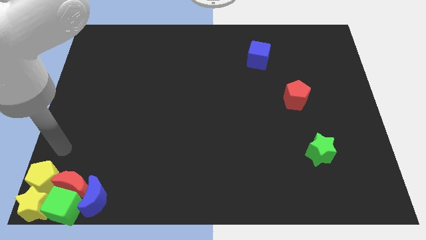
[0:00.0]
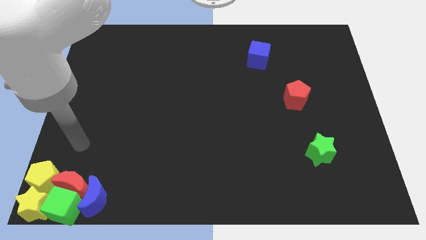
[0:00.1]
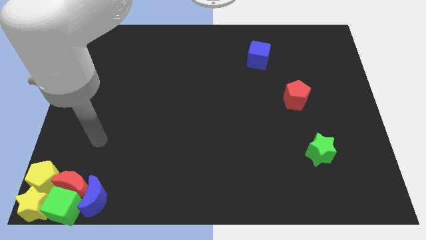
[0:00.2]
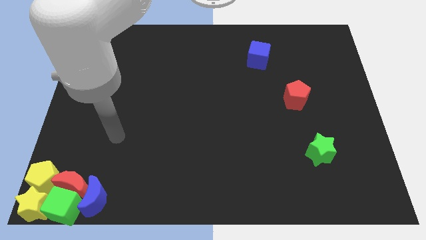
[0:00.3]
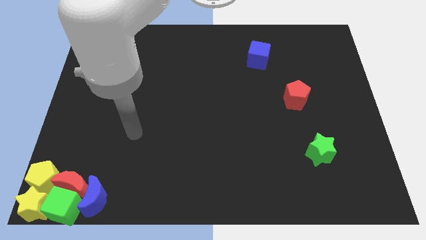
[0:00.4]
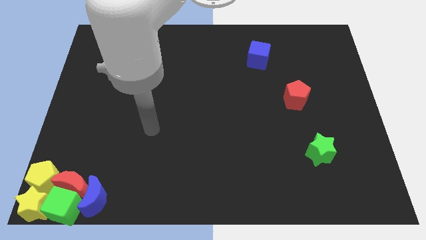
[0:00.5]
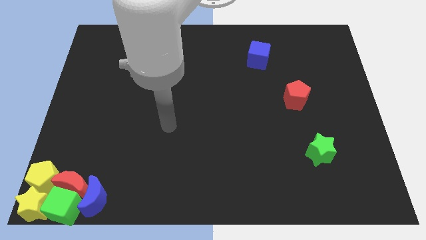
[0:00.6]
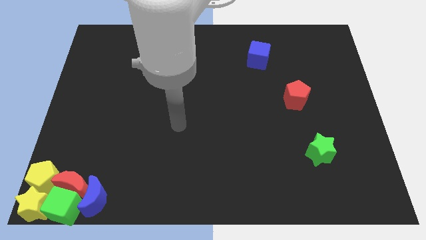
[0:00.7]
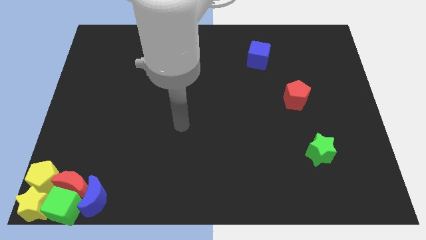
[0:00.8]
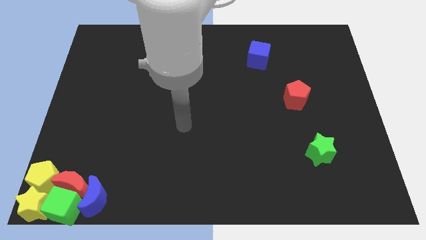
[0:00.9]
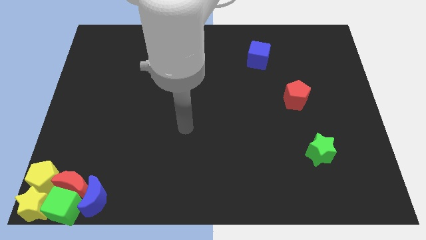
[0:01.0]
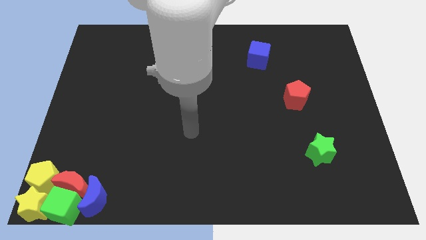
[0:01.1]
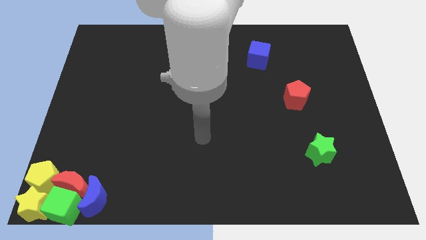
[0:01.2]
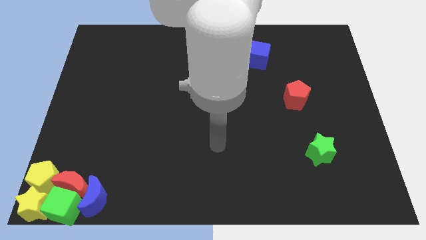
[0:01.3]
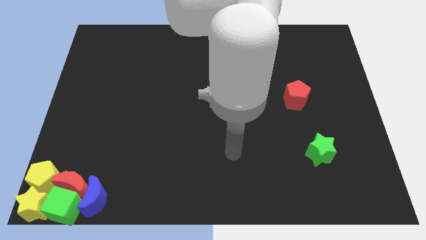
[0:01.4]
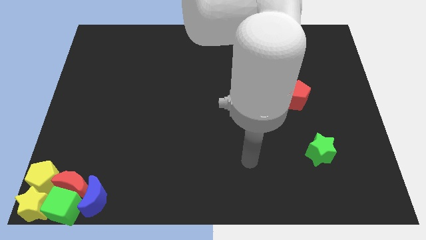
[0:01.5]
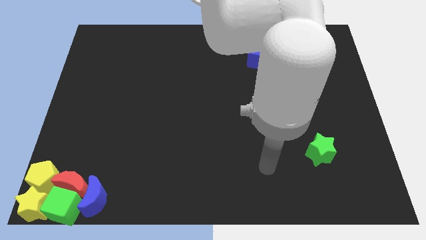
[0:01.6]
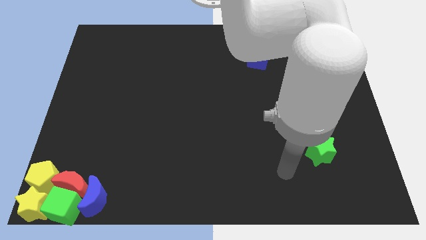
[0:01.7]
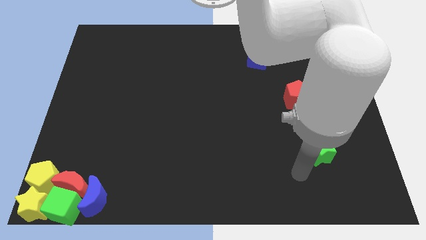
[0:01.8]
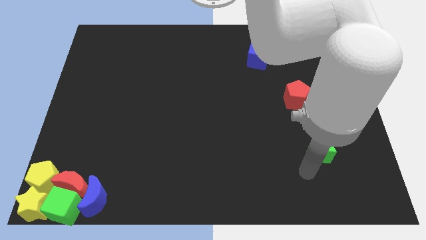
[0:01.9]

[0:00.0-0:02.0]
place your arm below green star

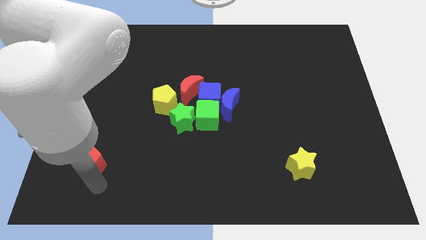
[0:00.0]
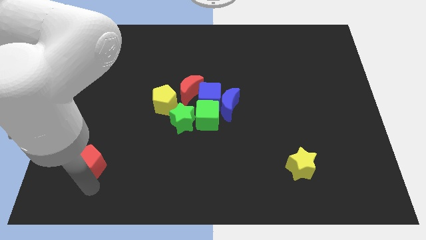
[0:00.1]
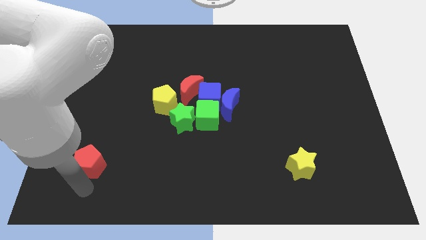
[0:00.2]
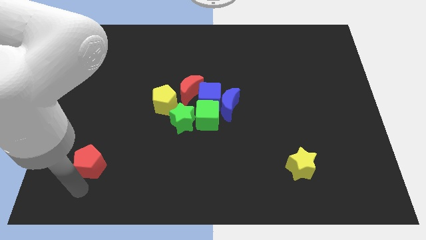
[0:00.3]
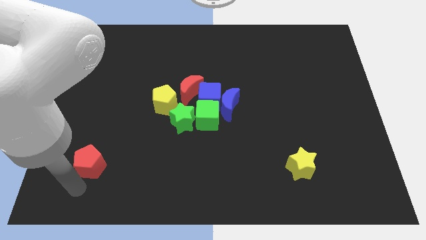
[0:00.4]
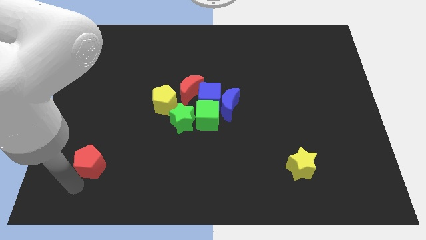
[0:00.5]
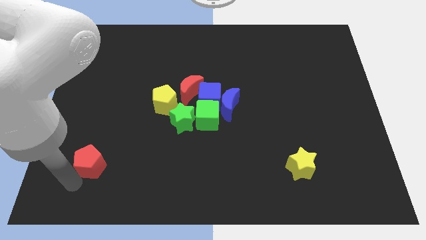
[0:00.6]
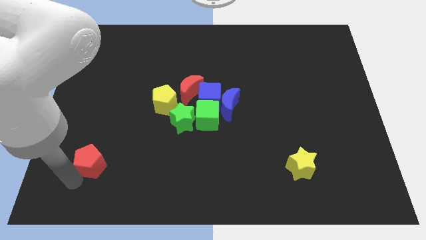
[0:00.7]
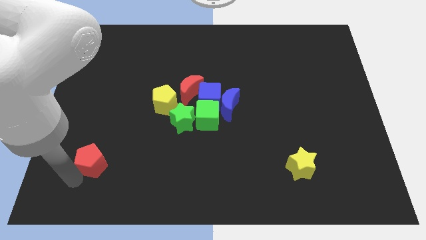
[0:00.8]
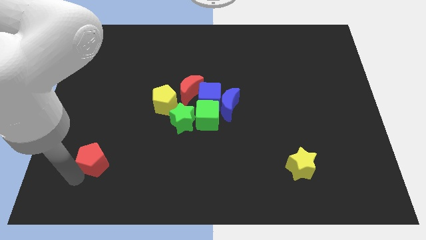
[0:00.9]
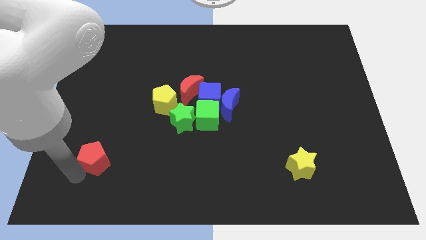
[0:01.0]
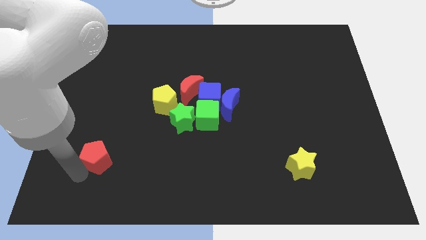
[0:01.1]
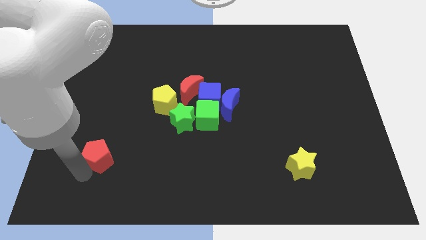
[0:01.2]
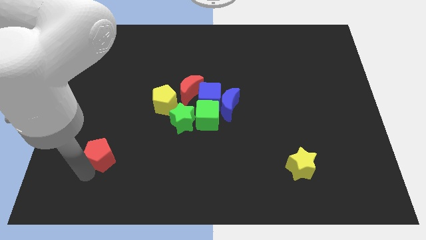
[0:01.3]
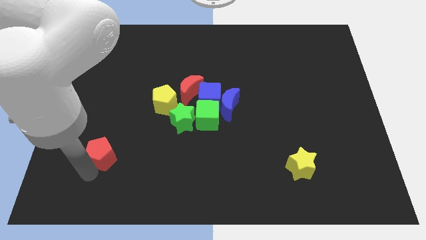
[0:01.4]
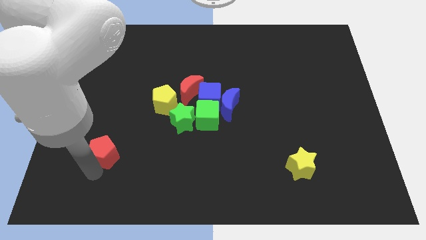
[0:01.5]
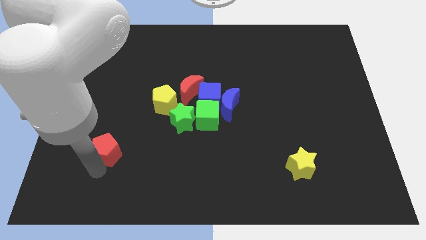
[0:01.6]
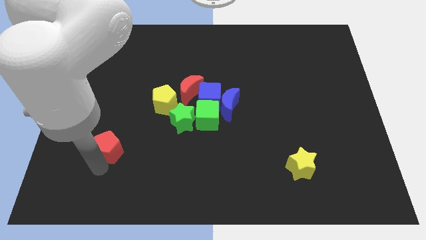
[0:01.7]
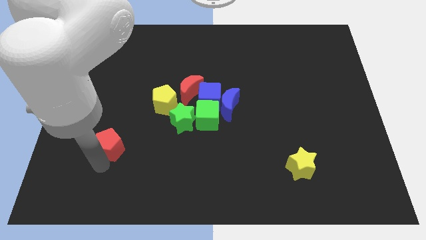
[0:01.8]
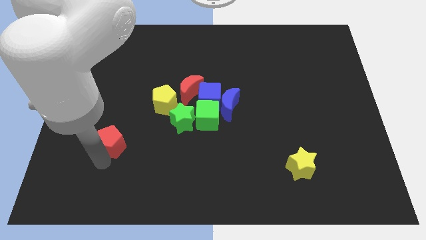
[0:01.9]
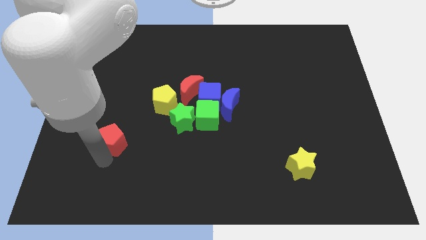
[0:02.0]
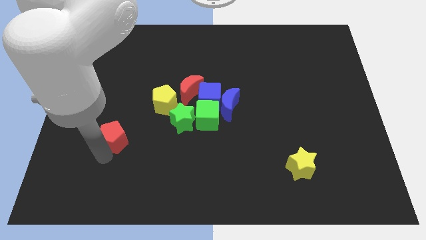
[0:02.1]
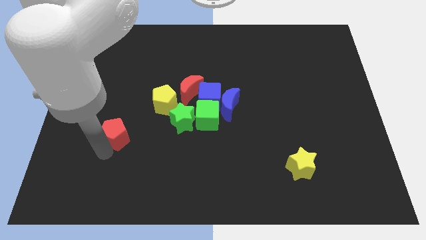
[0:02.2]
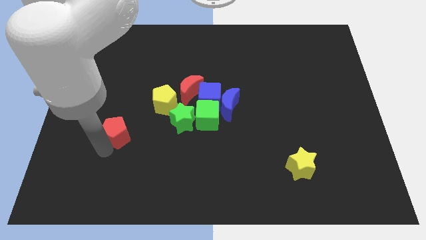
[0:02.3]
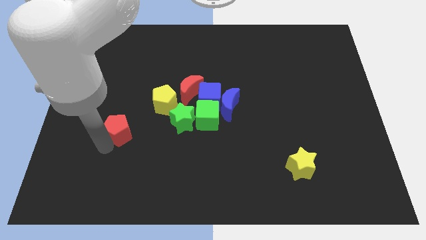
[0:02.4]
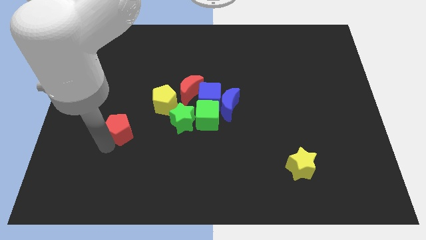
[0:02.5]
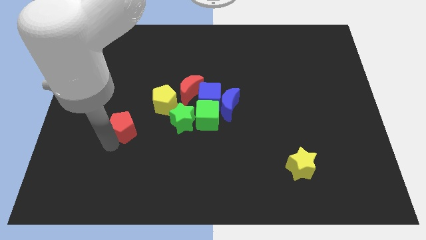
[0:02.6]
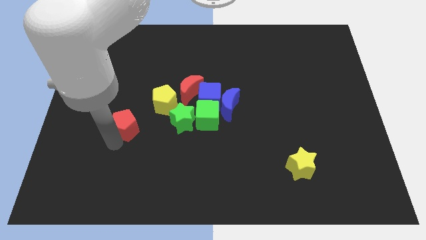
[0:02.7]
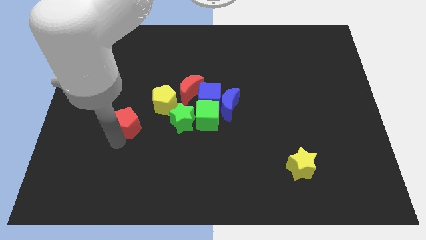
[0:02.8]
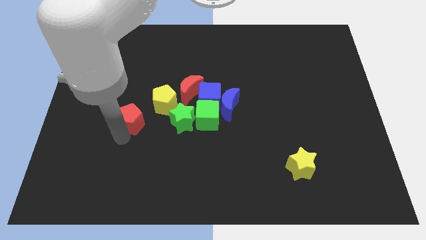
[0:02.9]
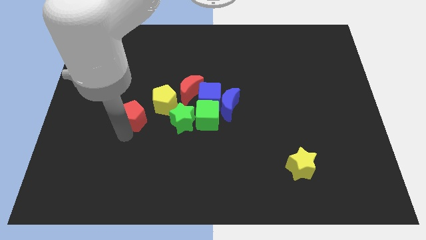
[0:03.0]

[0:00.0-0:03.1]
place red pentagon parallel to green star

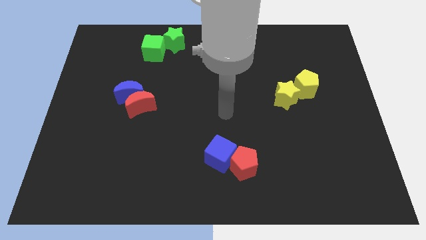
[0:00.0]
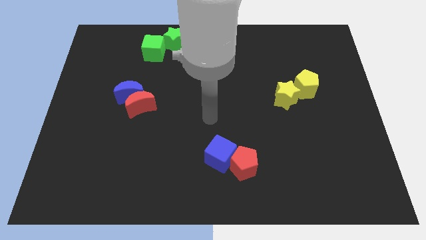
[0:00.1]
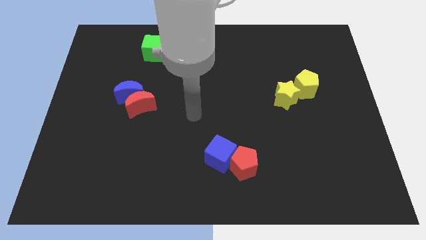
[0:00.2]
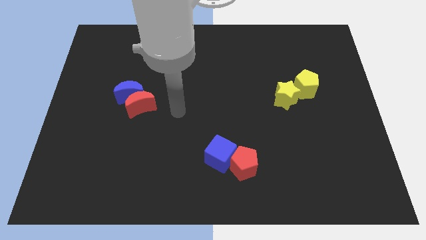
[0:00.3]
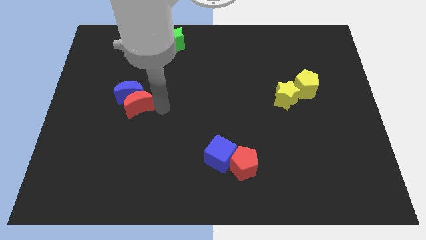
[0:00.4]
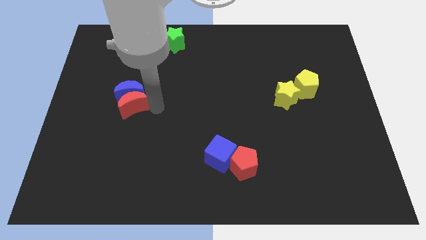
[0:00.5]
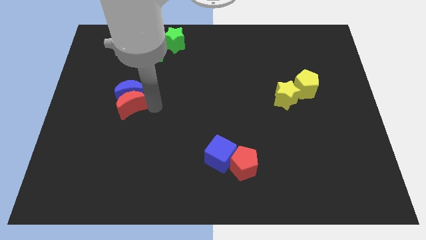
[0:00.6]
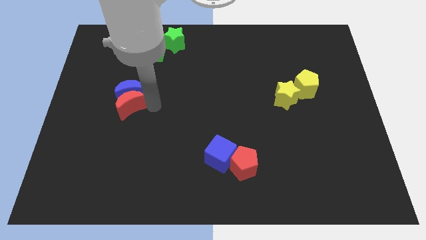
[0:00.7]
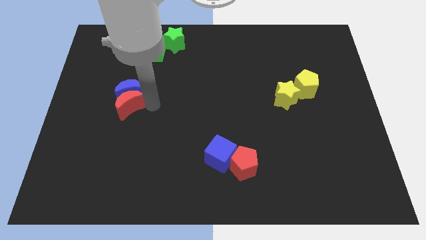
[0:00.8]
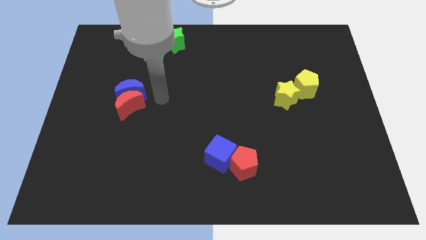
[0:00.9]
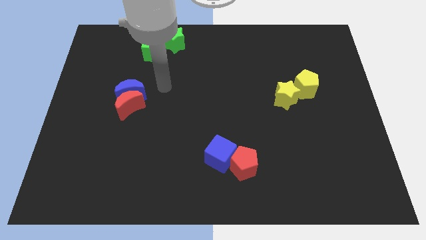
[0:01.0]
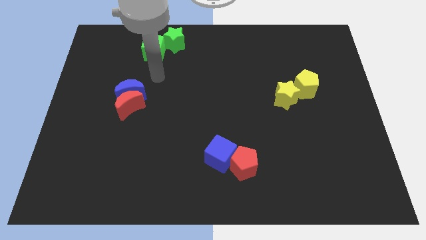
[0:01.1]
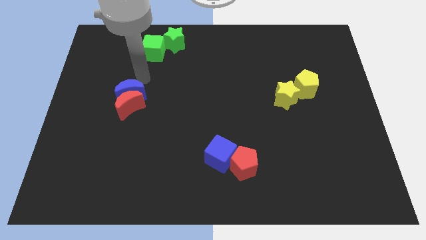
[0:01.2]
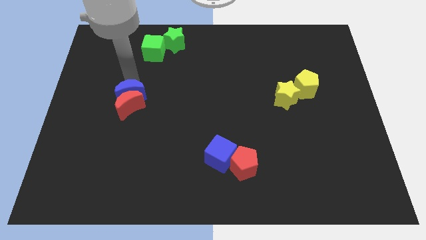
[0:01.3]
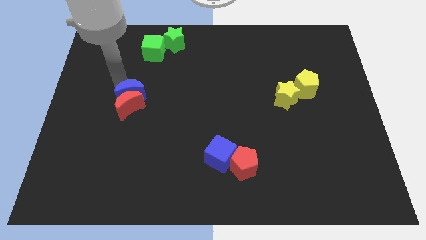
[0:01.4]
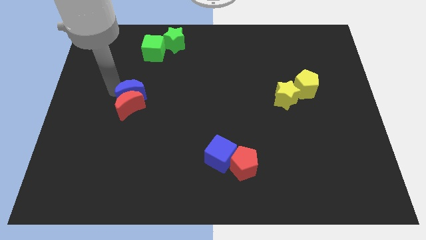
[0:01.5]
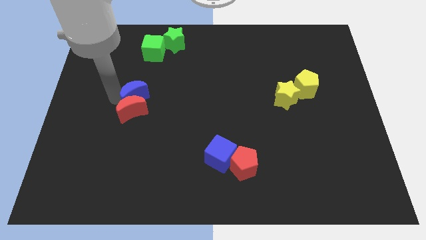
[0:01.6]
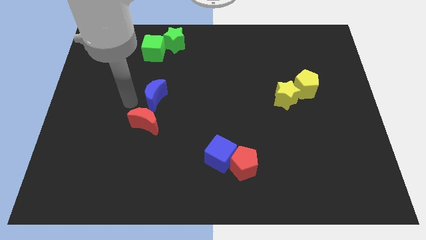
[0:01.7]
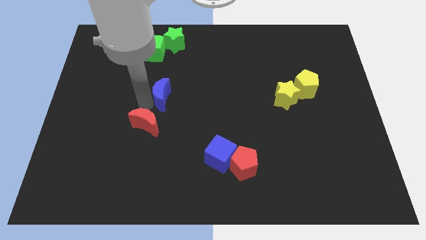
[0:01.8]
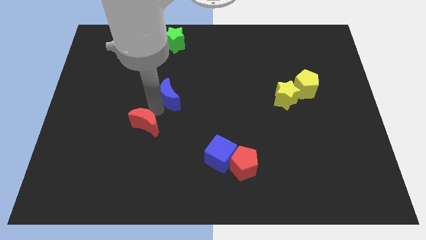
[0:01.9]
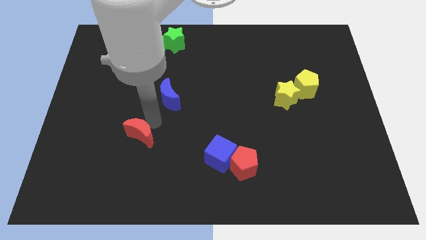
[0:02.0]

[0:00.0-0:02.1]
separate the red crescent and blue crescent

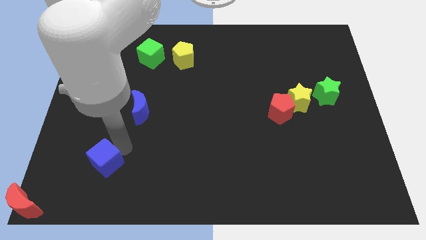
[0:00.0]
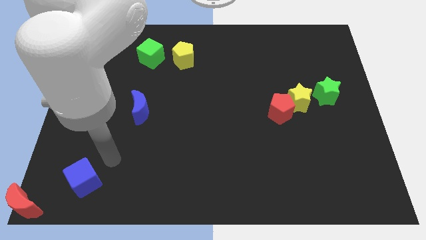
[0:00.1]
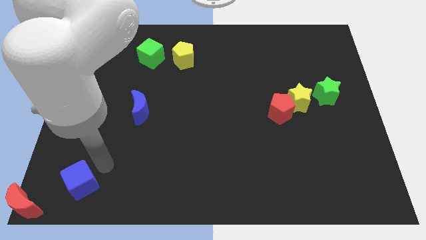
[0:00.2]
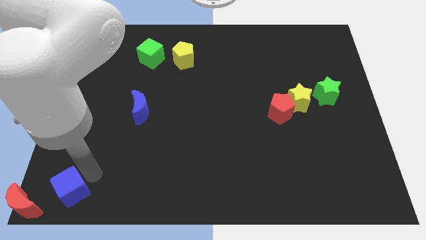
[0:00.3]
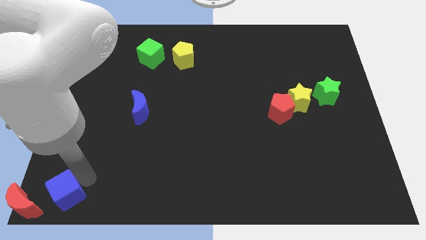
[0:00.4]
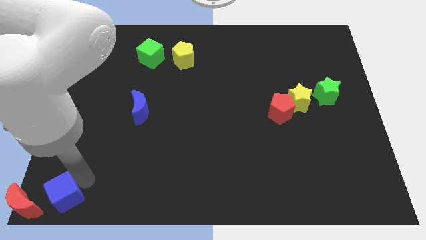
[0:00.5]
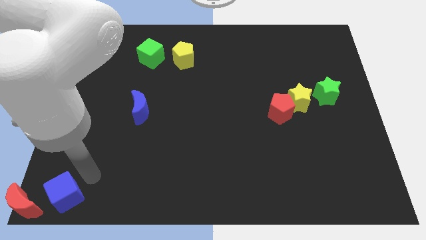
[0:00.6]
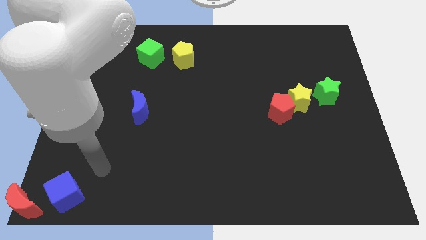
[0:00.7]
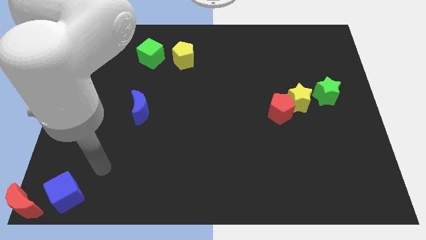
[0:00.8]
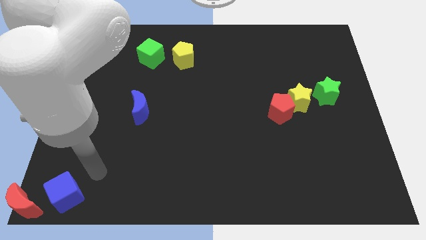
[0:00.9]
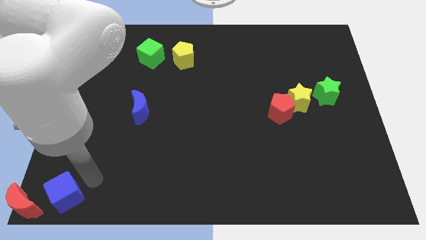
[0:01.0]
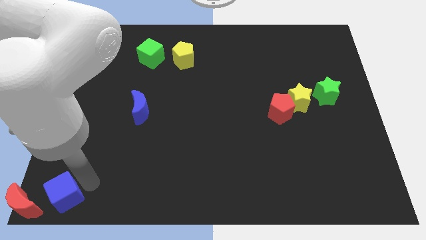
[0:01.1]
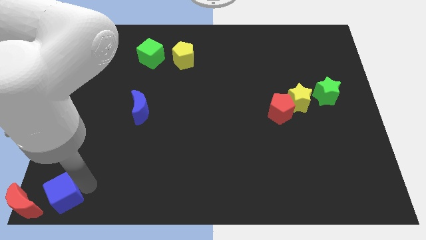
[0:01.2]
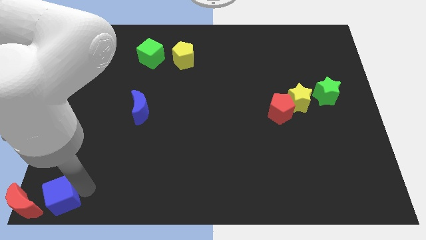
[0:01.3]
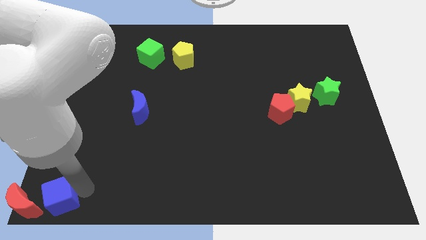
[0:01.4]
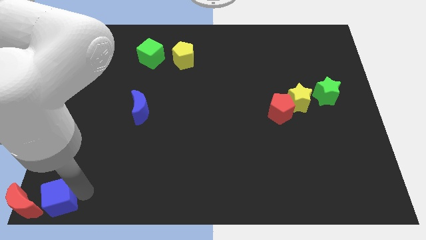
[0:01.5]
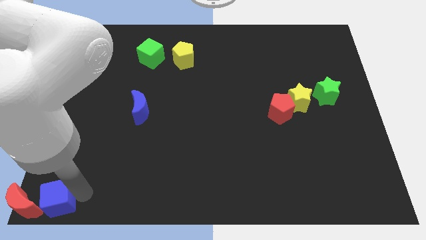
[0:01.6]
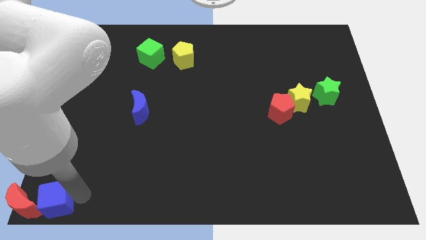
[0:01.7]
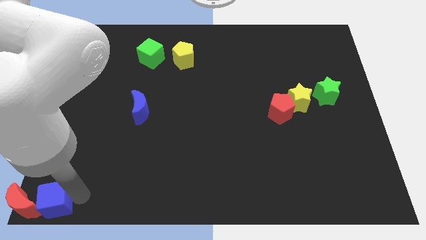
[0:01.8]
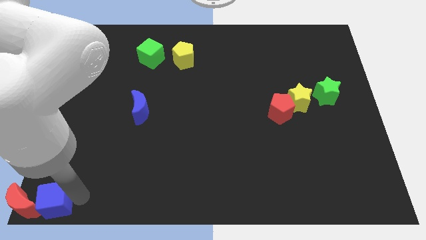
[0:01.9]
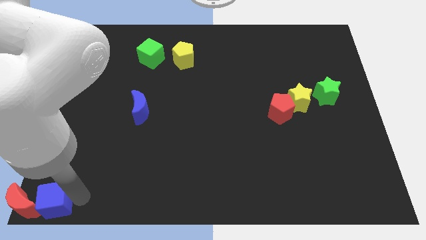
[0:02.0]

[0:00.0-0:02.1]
move the blue cube to the bottom left corner
